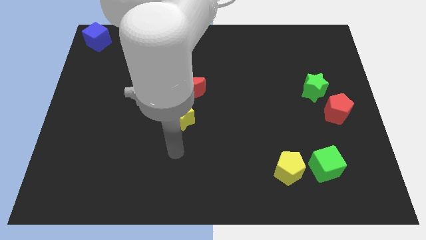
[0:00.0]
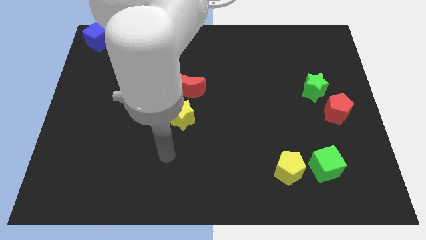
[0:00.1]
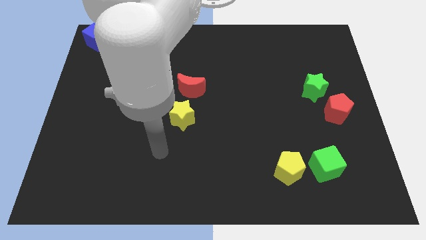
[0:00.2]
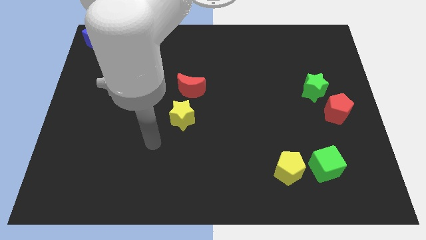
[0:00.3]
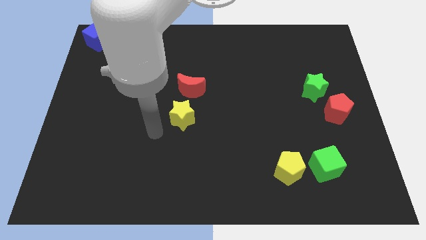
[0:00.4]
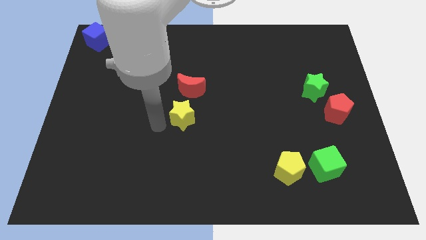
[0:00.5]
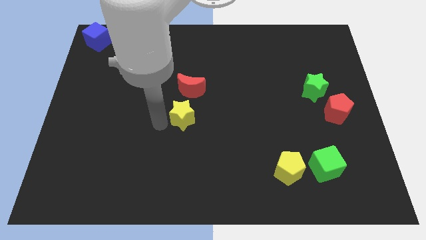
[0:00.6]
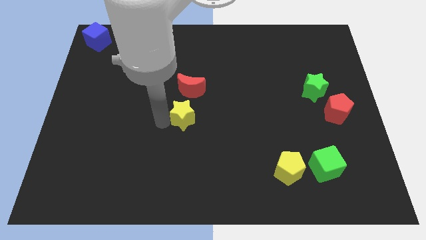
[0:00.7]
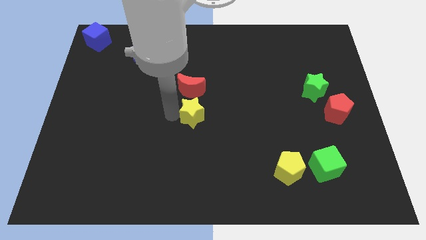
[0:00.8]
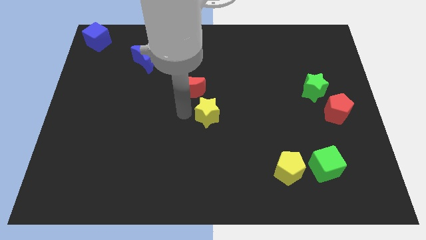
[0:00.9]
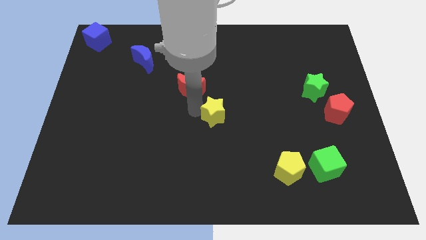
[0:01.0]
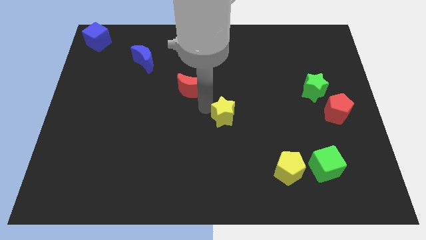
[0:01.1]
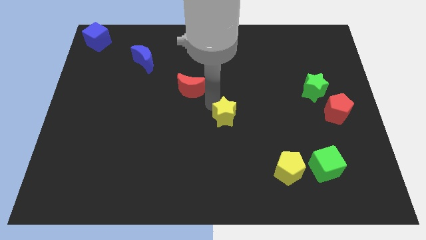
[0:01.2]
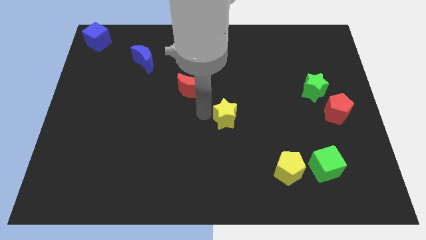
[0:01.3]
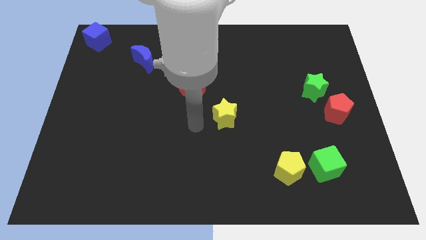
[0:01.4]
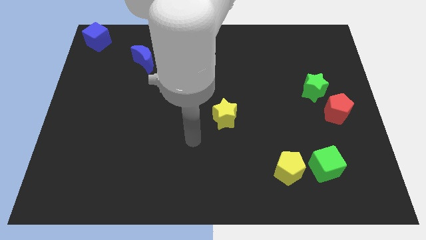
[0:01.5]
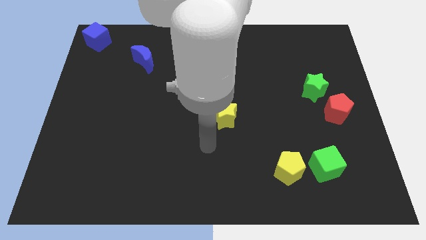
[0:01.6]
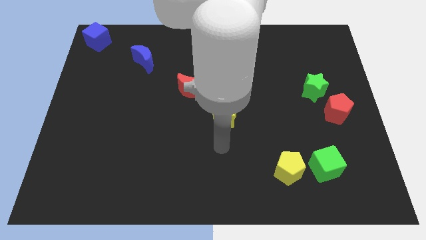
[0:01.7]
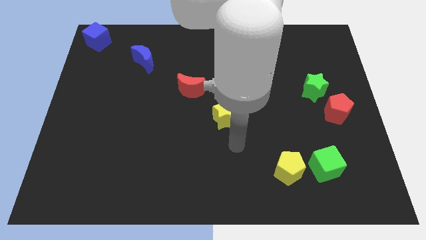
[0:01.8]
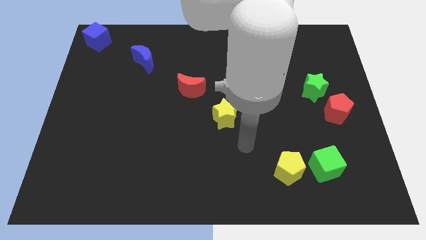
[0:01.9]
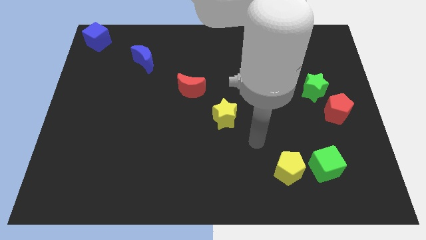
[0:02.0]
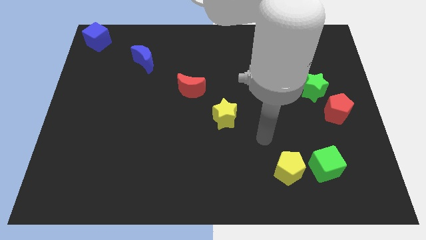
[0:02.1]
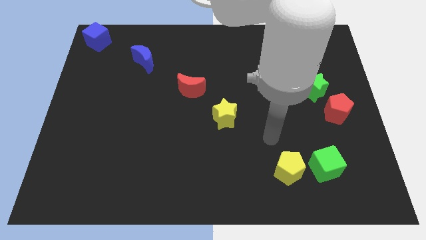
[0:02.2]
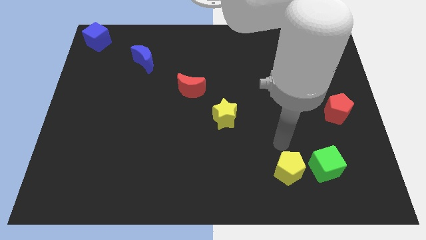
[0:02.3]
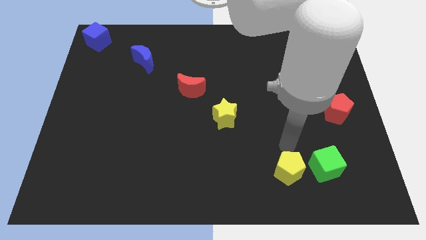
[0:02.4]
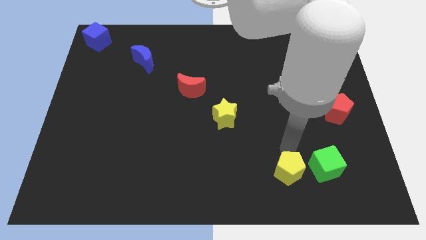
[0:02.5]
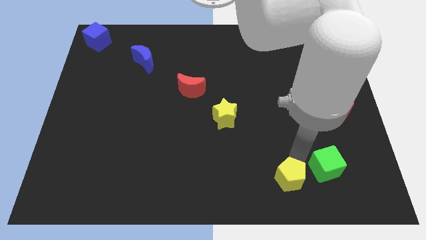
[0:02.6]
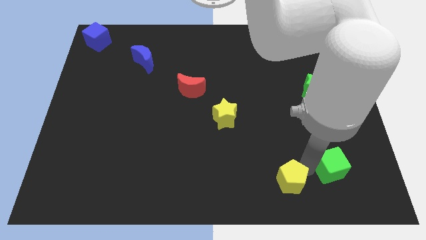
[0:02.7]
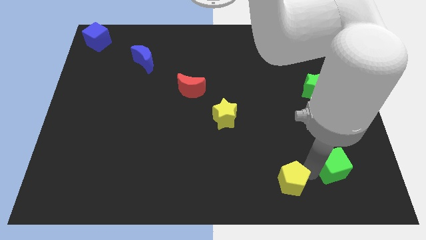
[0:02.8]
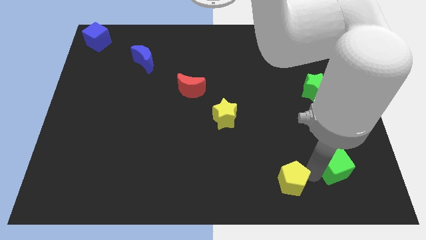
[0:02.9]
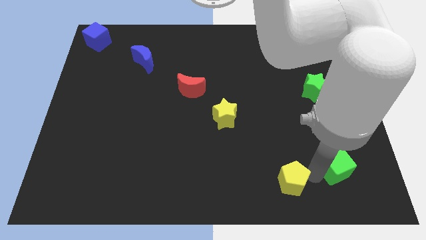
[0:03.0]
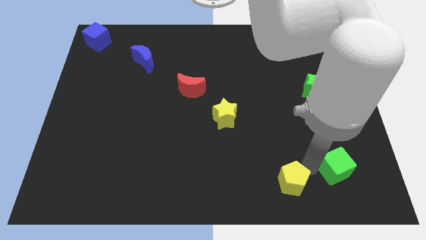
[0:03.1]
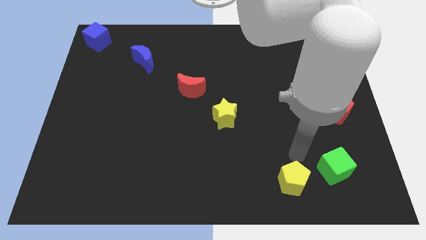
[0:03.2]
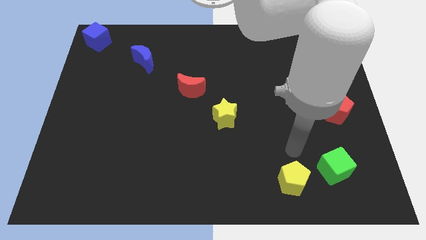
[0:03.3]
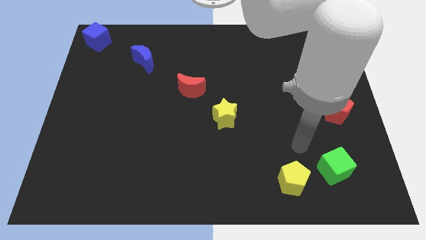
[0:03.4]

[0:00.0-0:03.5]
place your arm above yellow pentagon

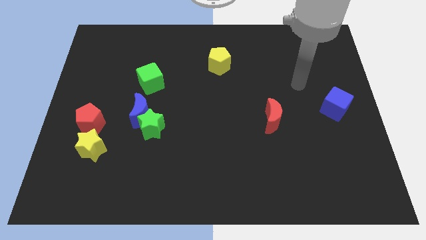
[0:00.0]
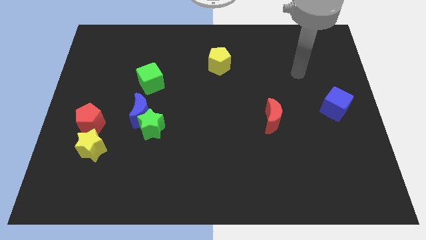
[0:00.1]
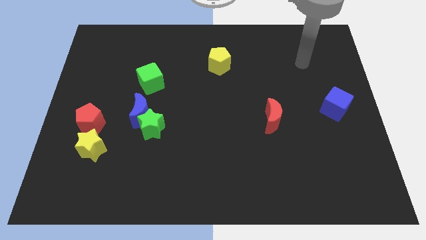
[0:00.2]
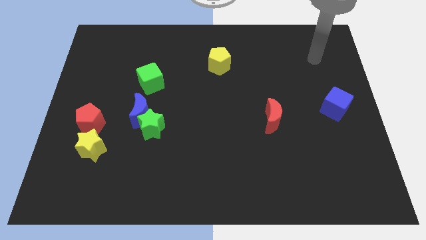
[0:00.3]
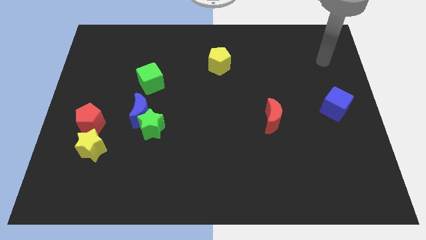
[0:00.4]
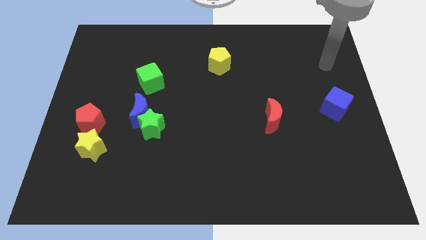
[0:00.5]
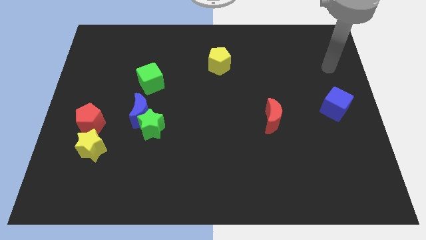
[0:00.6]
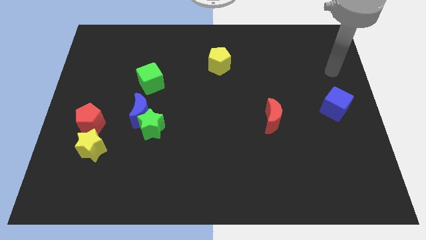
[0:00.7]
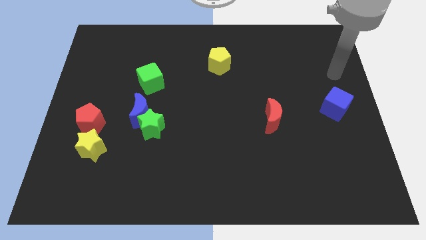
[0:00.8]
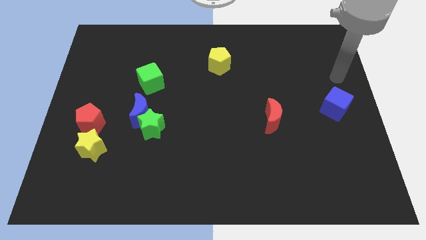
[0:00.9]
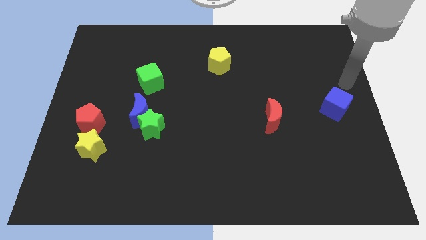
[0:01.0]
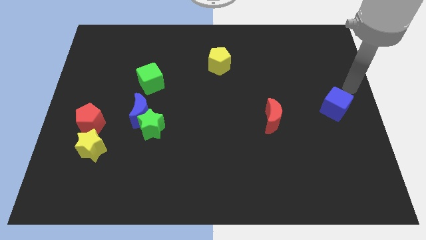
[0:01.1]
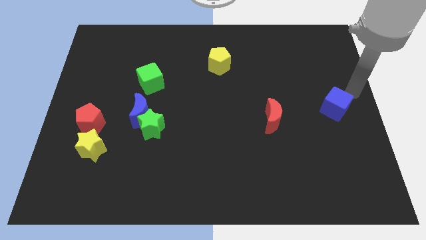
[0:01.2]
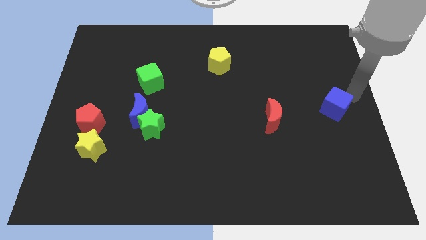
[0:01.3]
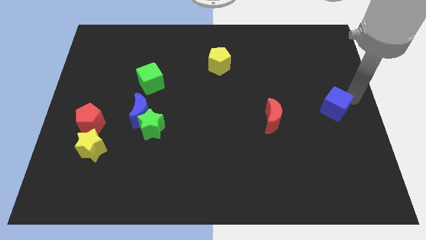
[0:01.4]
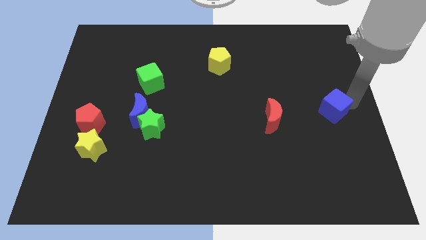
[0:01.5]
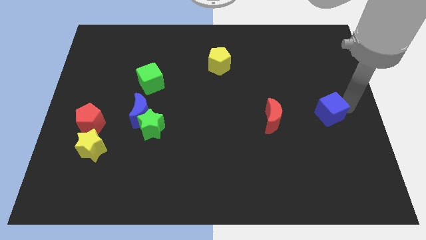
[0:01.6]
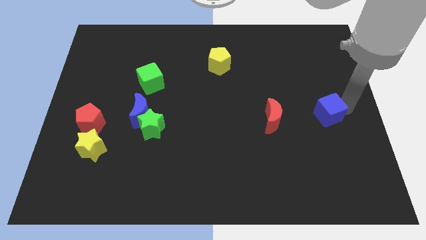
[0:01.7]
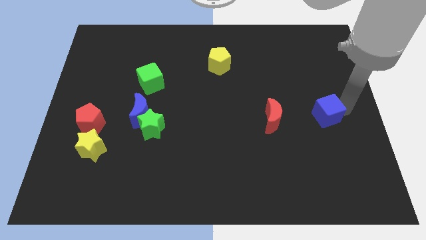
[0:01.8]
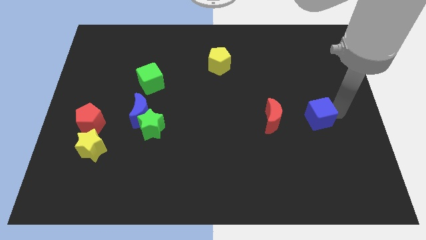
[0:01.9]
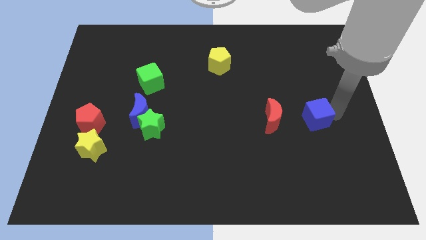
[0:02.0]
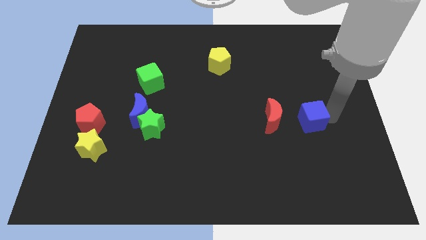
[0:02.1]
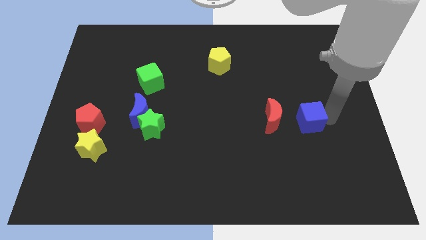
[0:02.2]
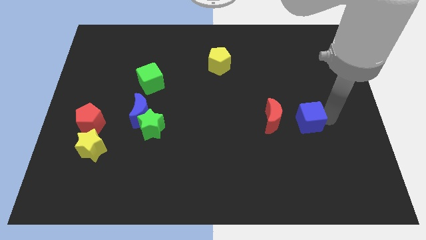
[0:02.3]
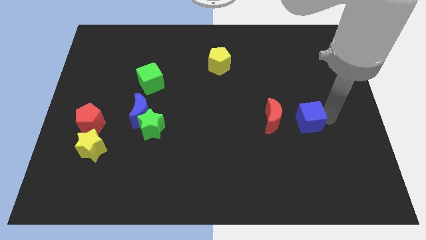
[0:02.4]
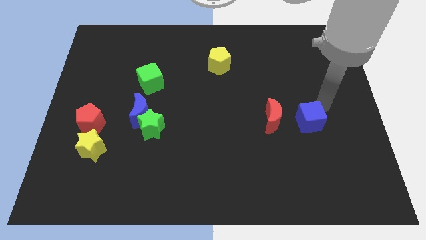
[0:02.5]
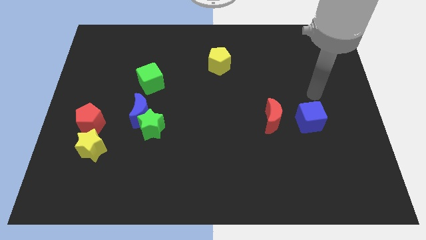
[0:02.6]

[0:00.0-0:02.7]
move the blue cube to the right of the red crescent

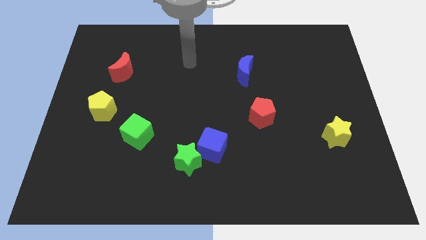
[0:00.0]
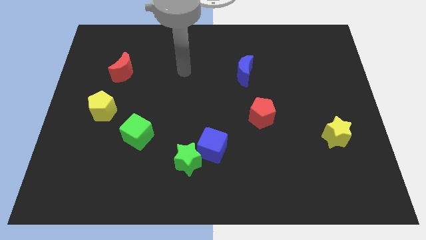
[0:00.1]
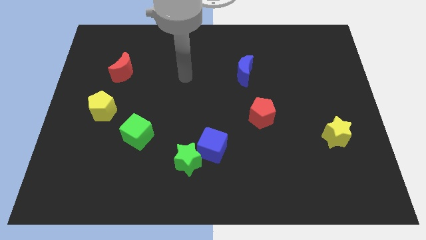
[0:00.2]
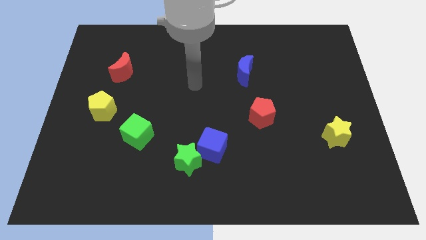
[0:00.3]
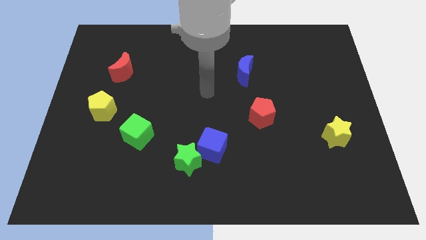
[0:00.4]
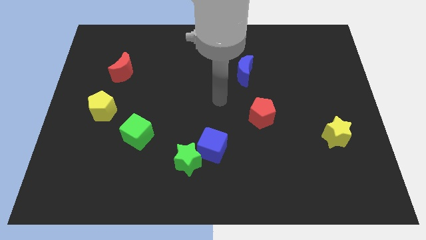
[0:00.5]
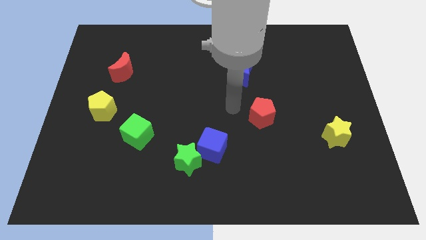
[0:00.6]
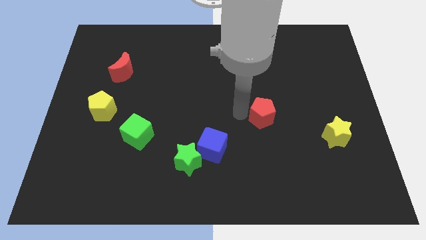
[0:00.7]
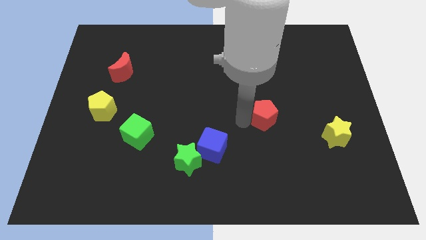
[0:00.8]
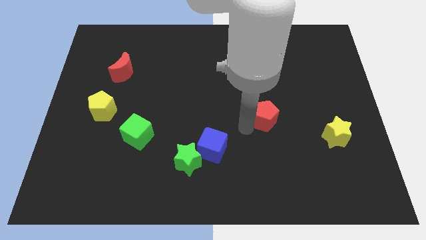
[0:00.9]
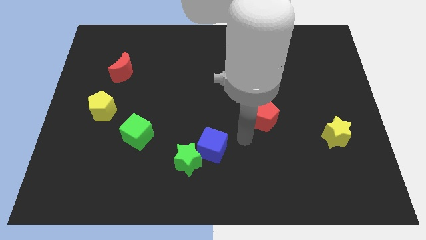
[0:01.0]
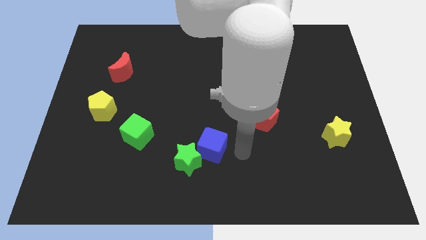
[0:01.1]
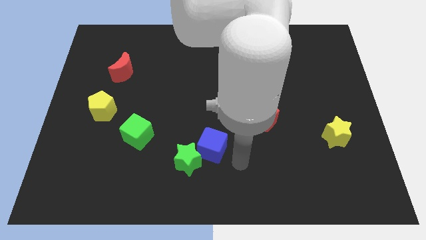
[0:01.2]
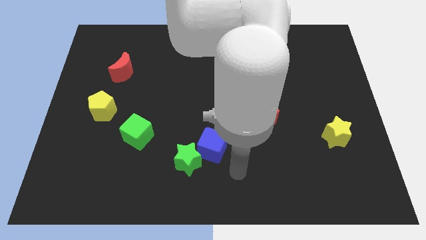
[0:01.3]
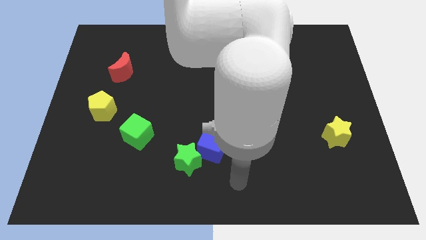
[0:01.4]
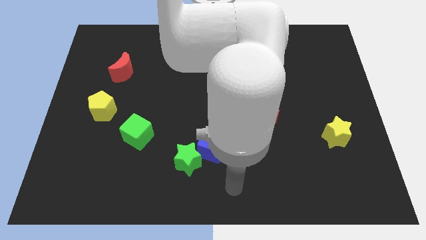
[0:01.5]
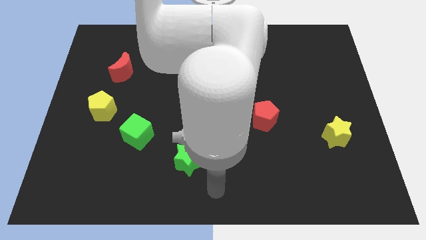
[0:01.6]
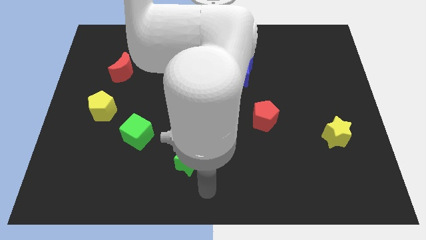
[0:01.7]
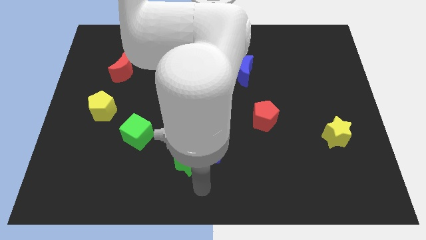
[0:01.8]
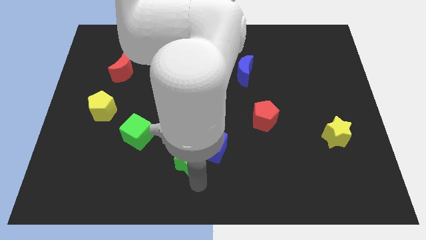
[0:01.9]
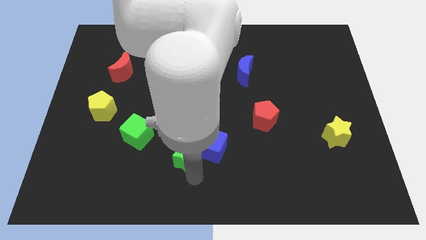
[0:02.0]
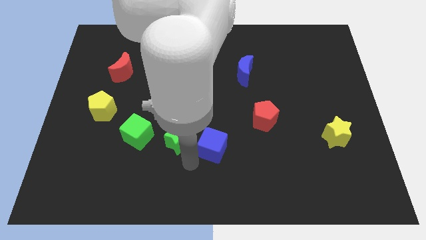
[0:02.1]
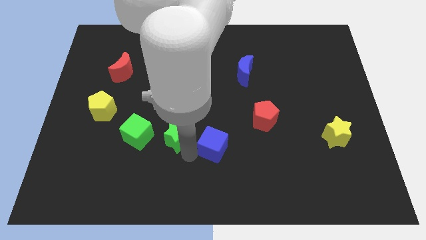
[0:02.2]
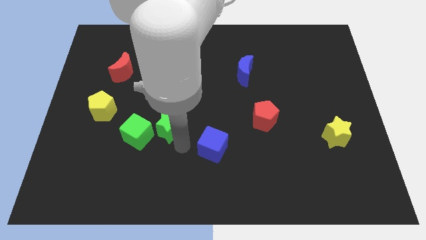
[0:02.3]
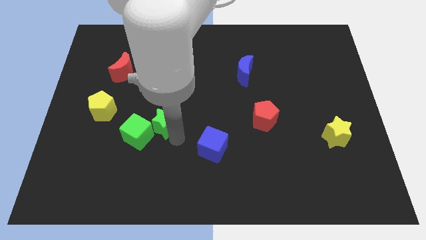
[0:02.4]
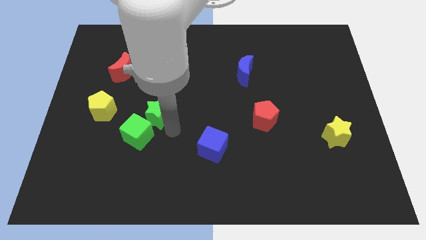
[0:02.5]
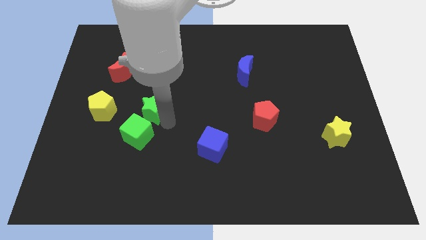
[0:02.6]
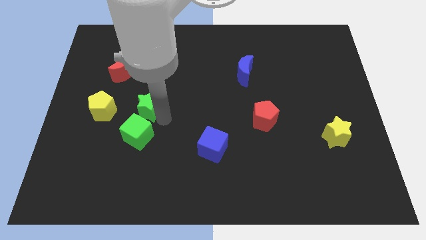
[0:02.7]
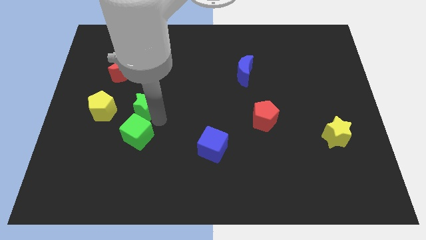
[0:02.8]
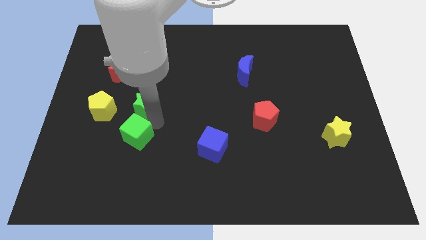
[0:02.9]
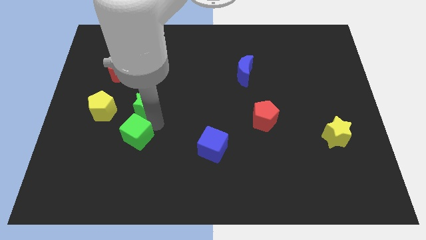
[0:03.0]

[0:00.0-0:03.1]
place the green star on top of green cube
